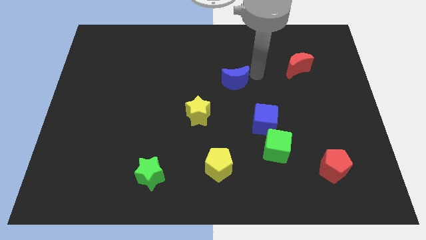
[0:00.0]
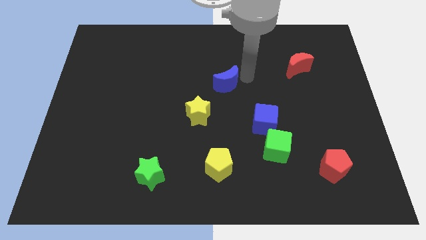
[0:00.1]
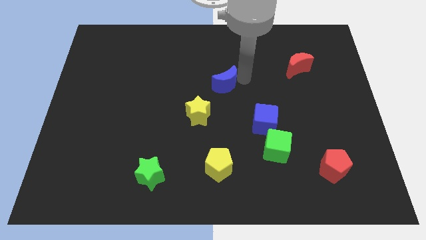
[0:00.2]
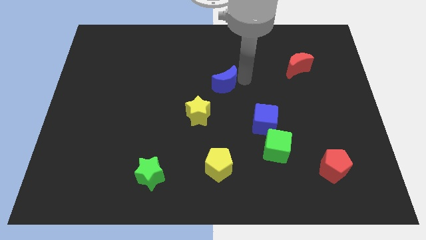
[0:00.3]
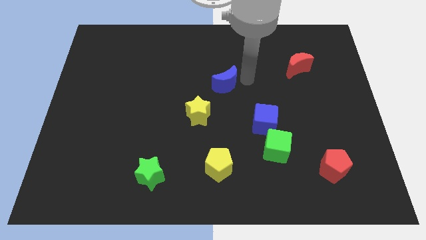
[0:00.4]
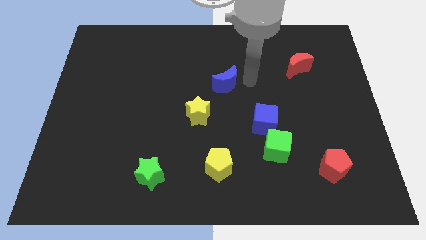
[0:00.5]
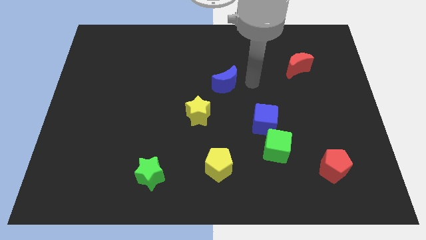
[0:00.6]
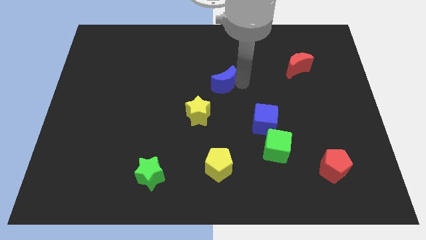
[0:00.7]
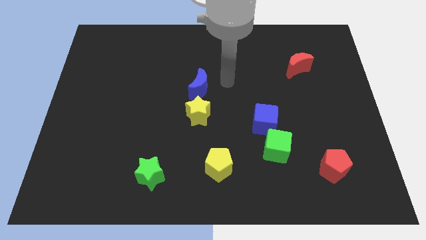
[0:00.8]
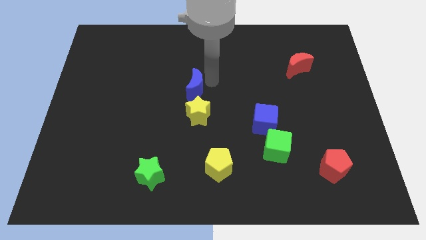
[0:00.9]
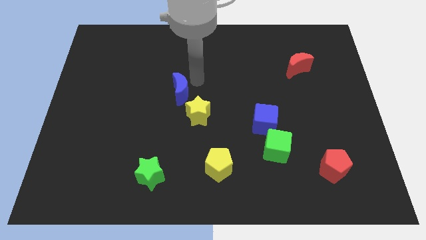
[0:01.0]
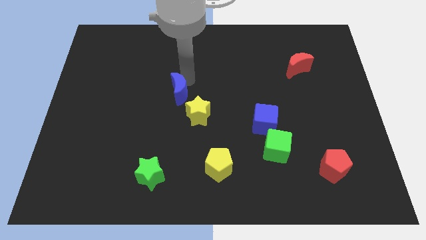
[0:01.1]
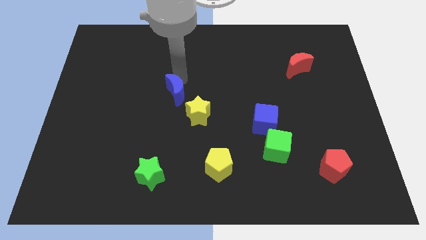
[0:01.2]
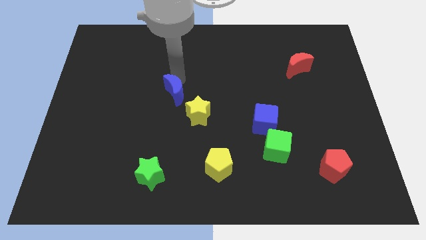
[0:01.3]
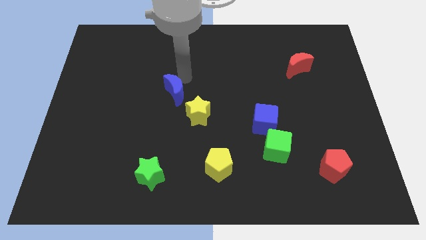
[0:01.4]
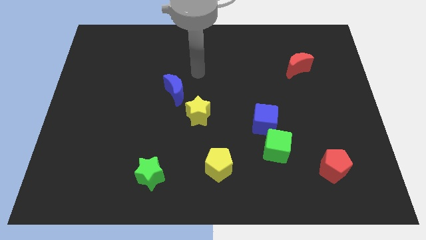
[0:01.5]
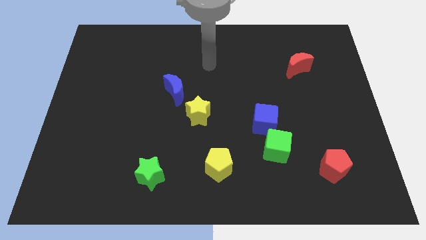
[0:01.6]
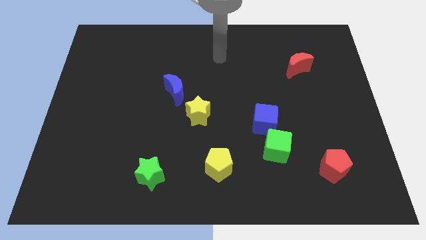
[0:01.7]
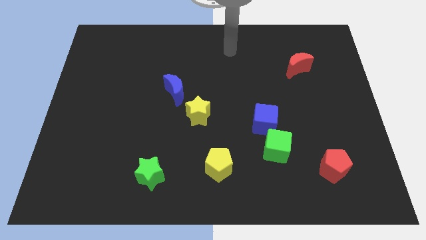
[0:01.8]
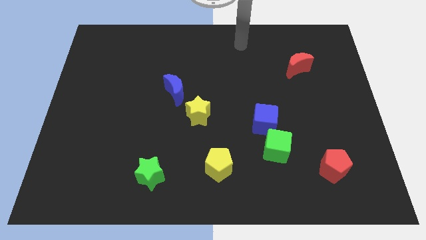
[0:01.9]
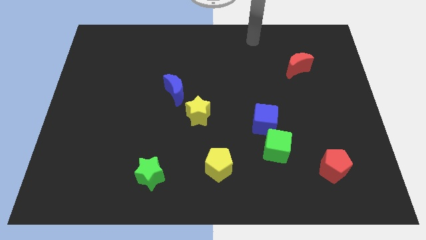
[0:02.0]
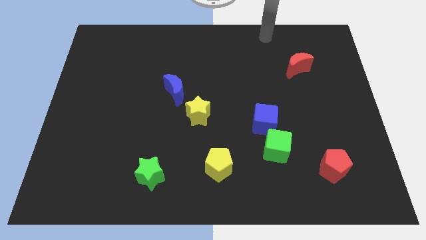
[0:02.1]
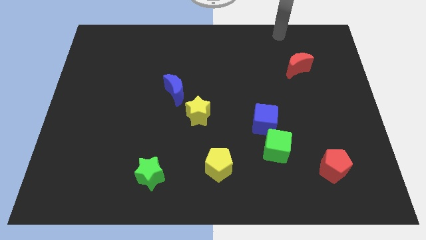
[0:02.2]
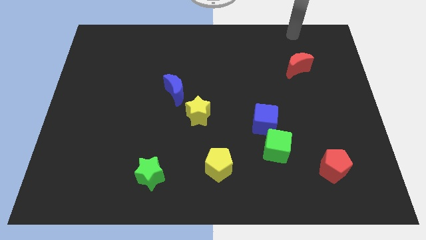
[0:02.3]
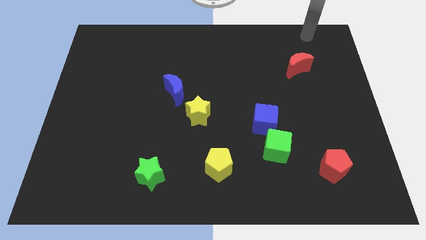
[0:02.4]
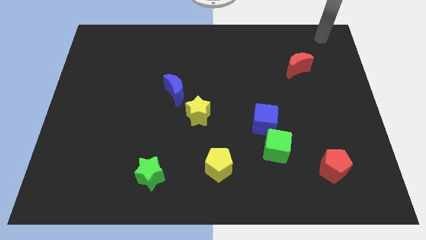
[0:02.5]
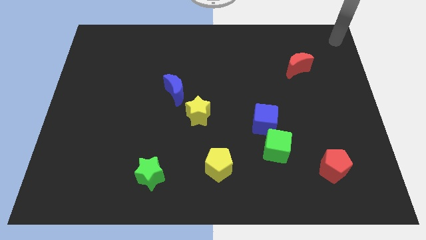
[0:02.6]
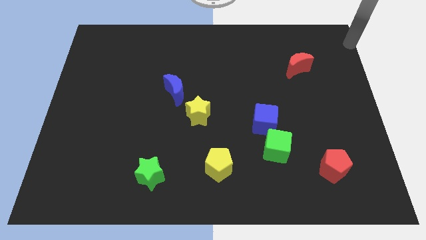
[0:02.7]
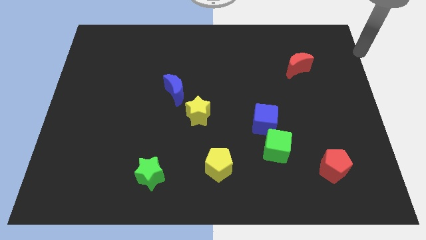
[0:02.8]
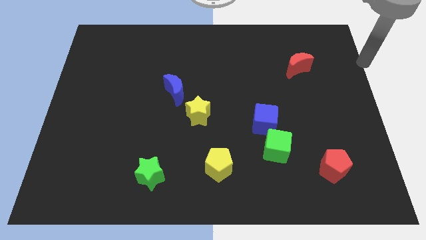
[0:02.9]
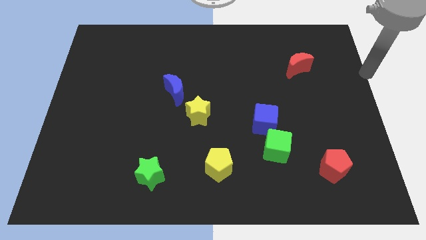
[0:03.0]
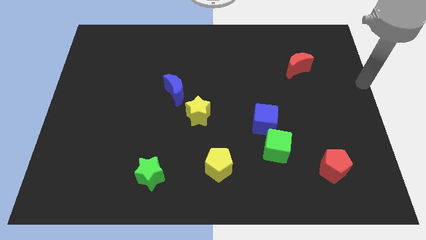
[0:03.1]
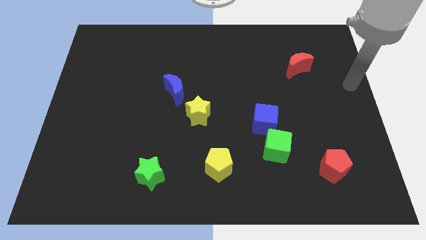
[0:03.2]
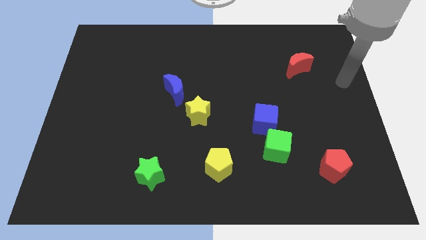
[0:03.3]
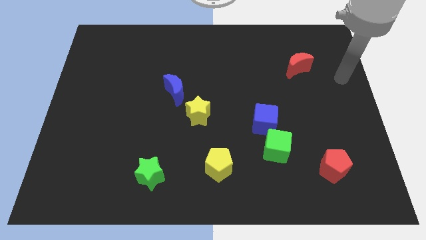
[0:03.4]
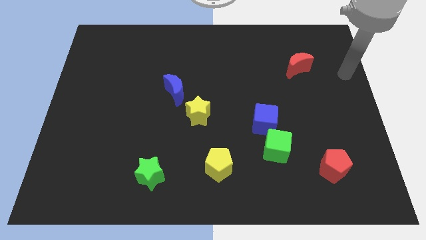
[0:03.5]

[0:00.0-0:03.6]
move the blue crescent to the left

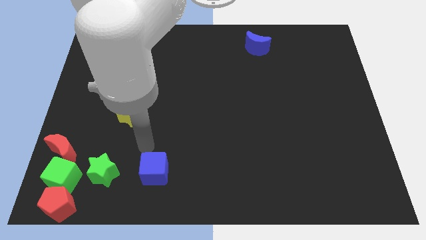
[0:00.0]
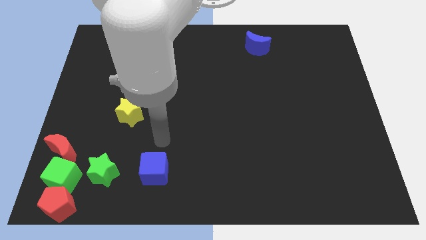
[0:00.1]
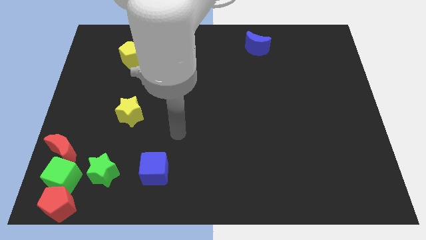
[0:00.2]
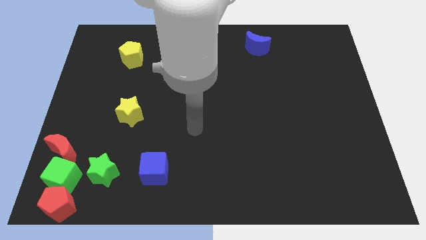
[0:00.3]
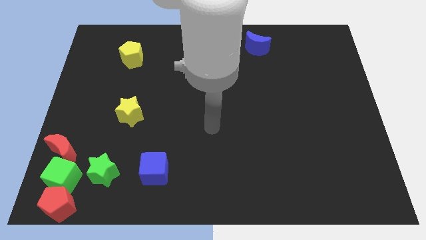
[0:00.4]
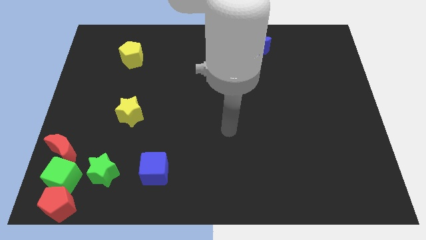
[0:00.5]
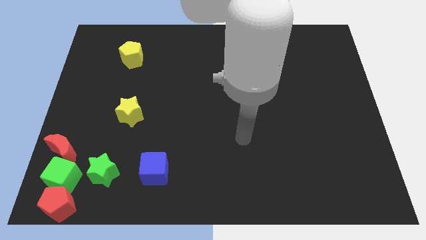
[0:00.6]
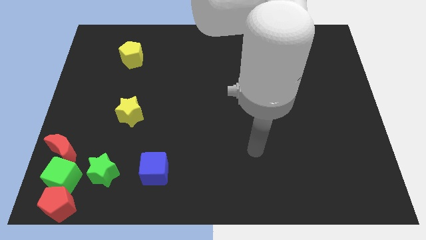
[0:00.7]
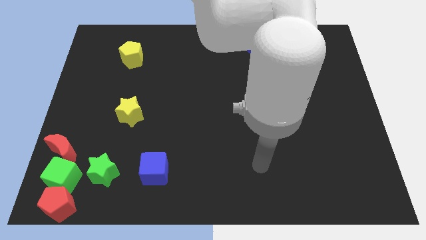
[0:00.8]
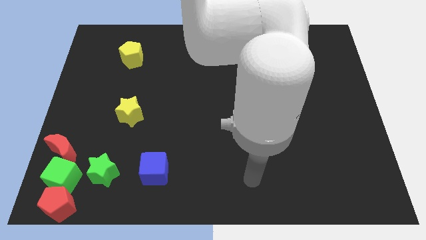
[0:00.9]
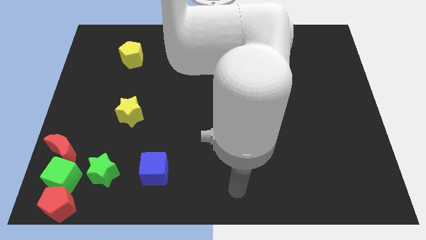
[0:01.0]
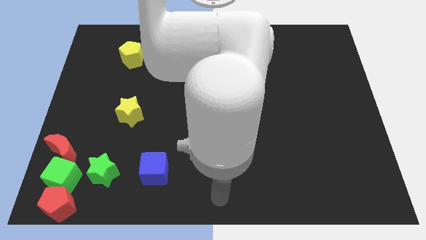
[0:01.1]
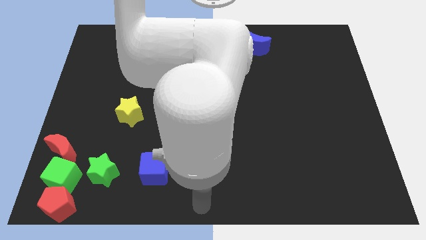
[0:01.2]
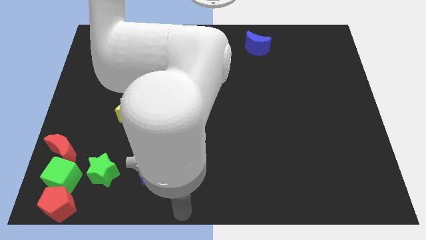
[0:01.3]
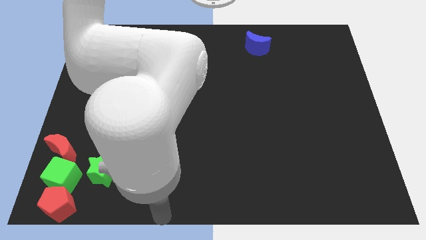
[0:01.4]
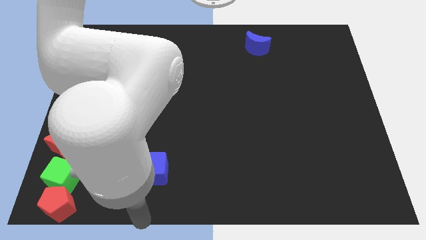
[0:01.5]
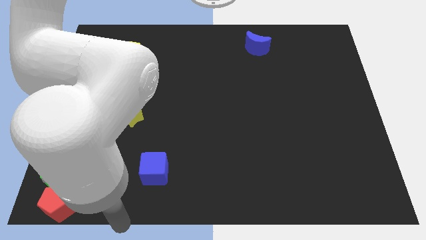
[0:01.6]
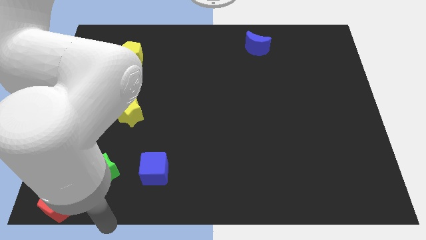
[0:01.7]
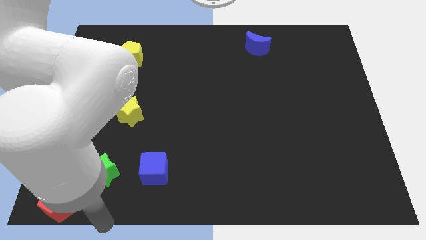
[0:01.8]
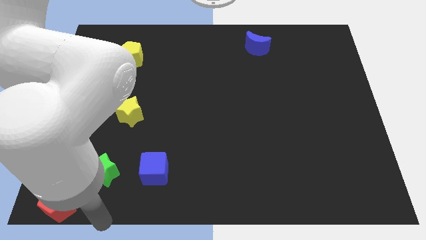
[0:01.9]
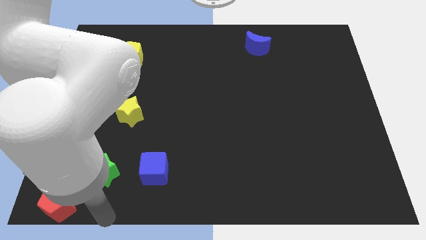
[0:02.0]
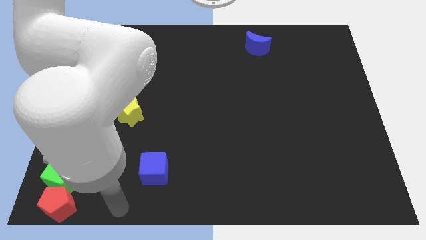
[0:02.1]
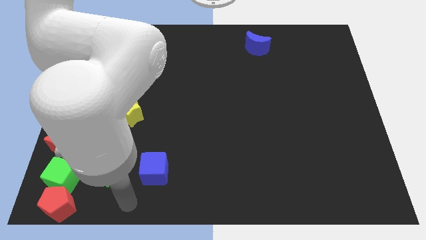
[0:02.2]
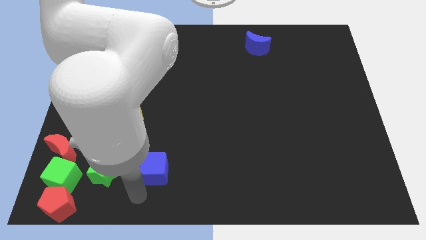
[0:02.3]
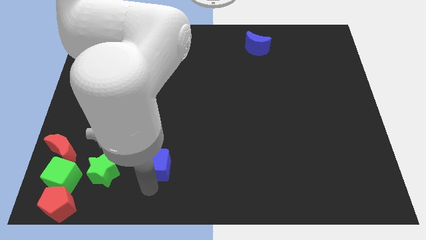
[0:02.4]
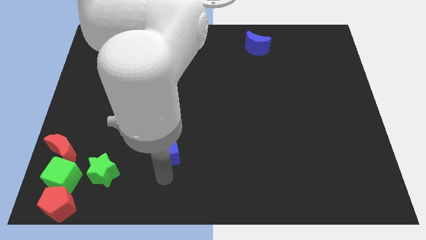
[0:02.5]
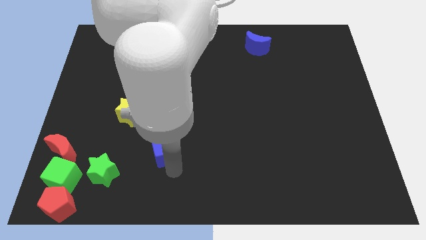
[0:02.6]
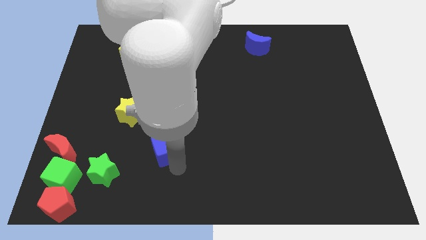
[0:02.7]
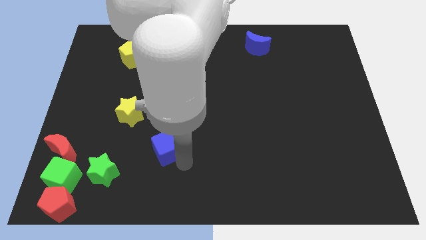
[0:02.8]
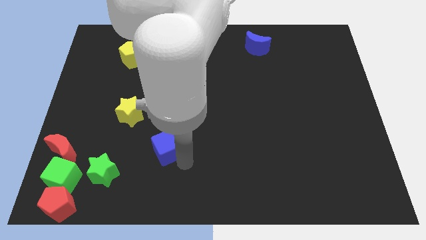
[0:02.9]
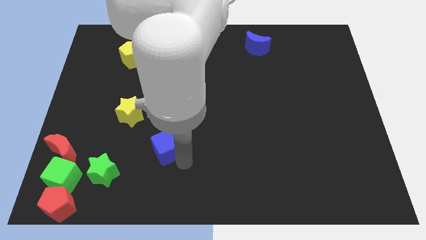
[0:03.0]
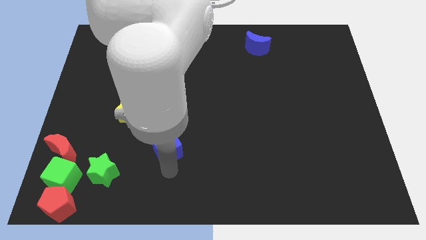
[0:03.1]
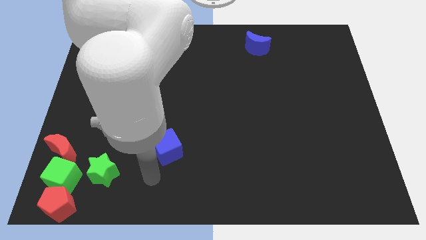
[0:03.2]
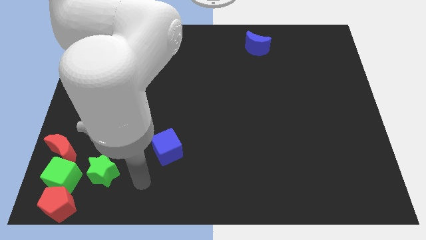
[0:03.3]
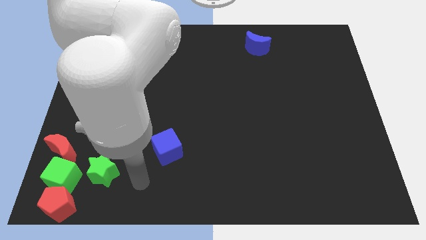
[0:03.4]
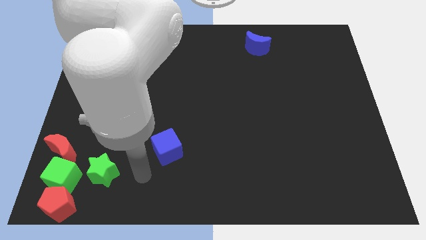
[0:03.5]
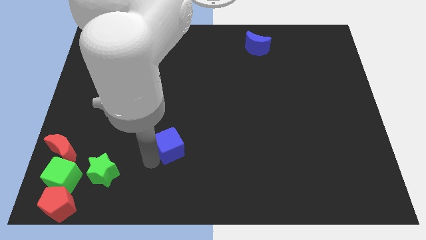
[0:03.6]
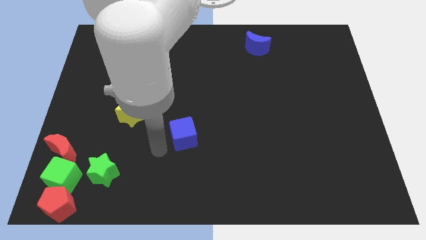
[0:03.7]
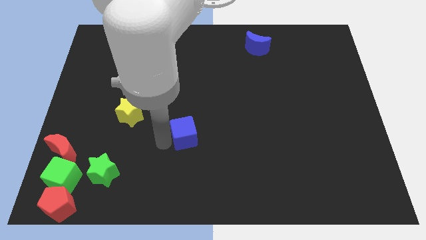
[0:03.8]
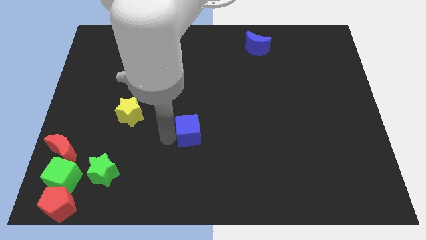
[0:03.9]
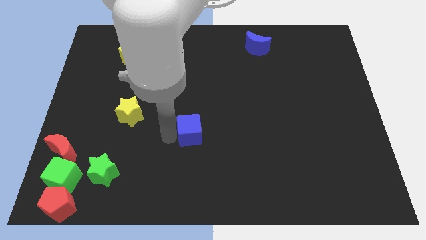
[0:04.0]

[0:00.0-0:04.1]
drag blue cube towards the center of the board

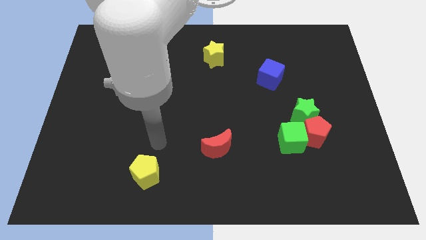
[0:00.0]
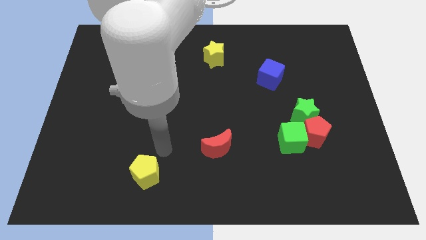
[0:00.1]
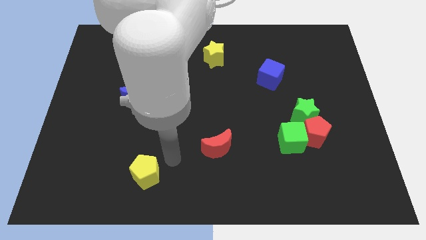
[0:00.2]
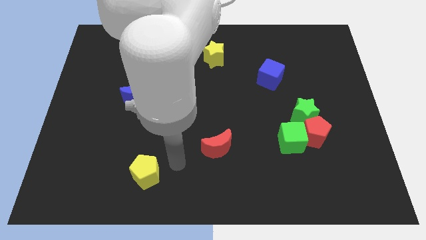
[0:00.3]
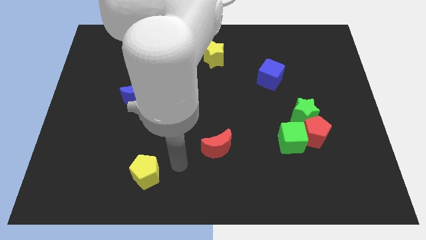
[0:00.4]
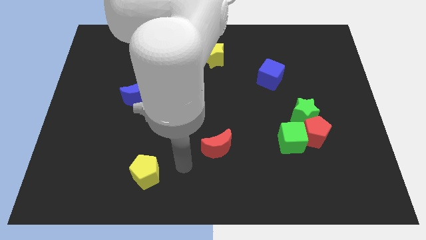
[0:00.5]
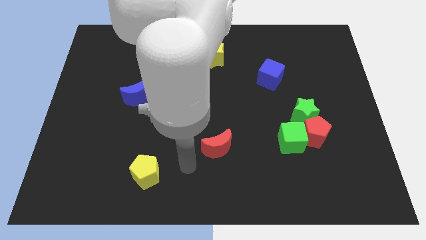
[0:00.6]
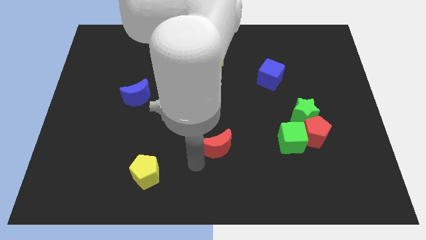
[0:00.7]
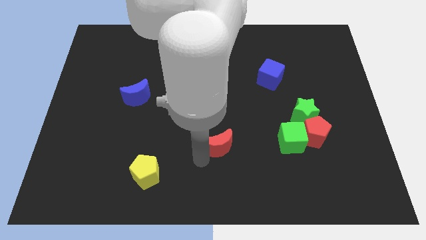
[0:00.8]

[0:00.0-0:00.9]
touch the bottom of red crescent

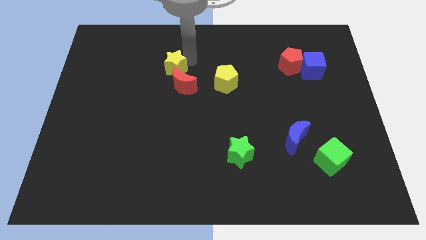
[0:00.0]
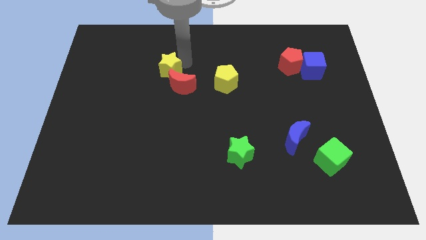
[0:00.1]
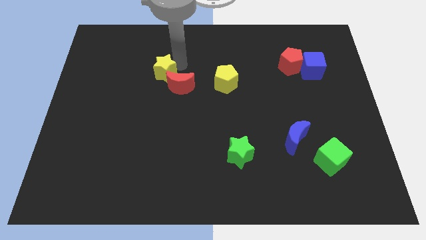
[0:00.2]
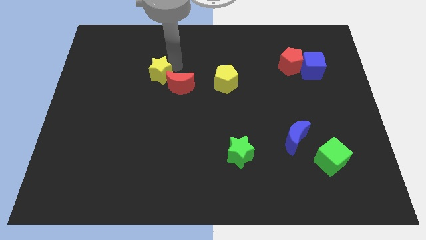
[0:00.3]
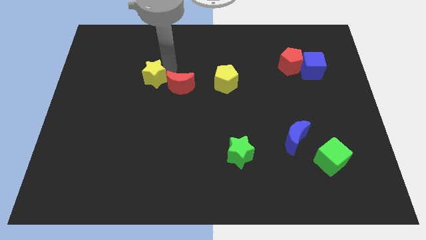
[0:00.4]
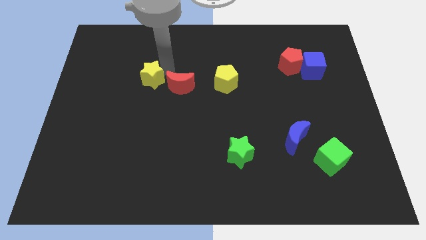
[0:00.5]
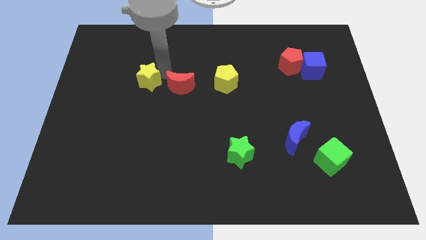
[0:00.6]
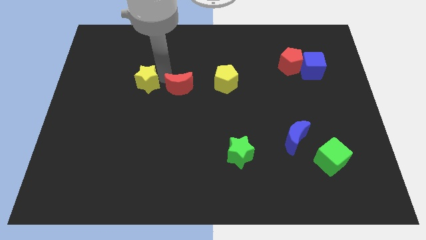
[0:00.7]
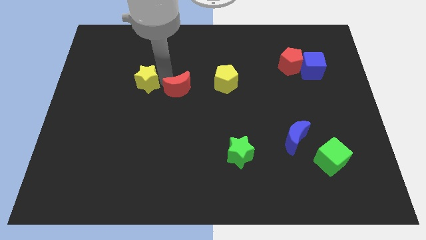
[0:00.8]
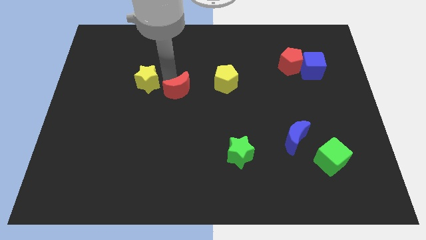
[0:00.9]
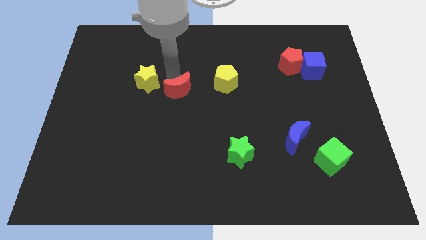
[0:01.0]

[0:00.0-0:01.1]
separate the yellow star from red crescent
